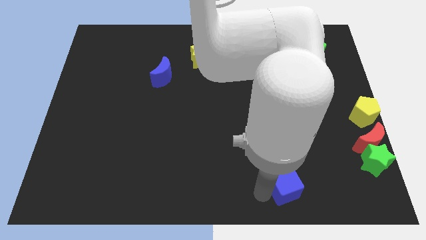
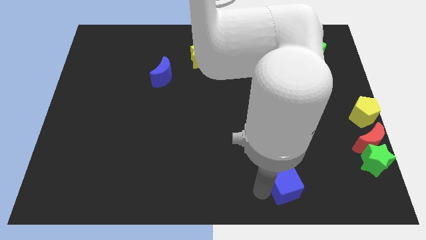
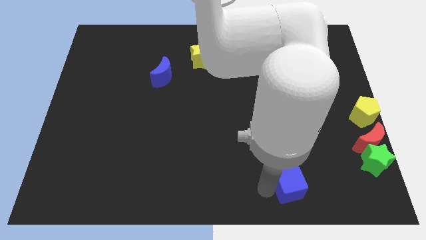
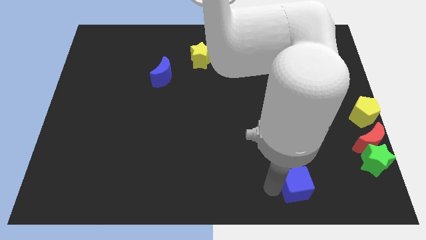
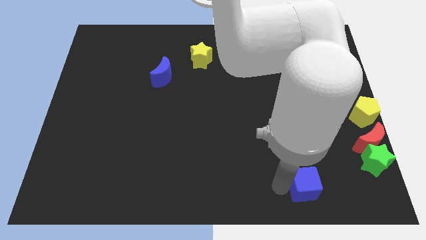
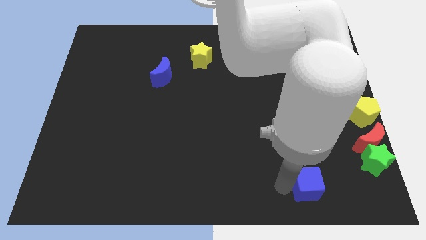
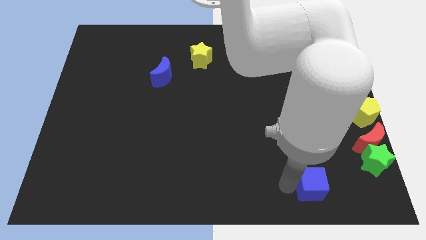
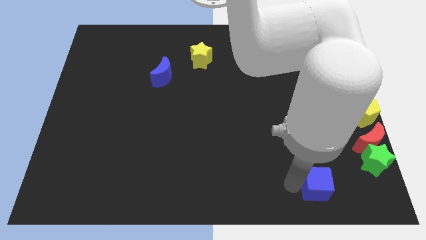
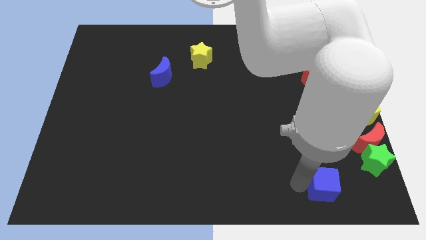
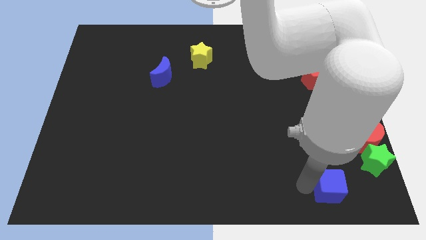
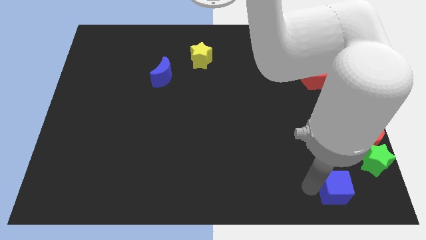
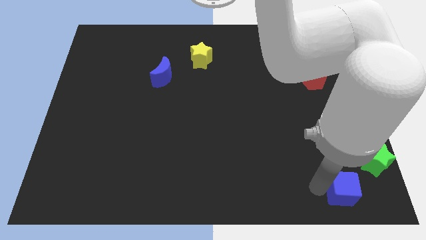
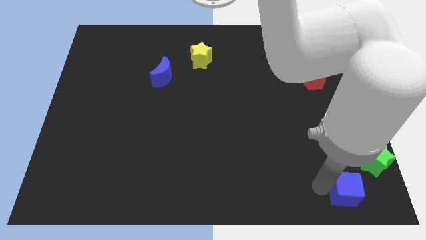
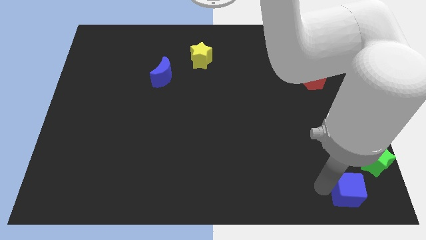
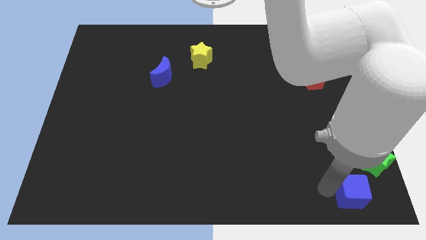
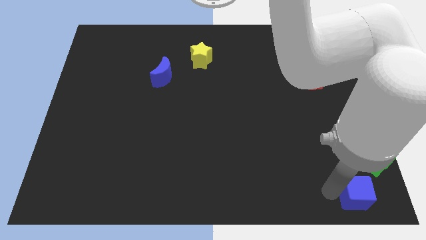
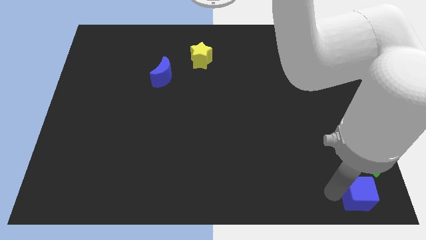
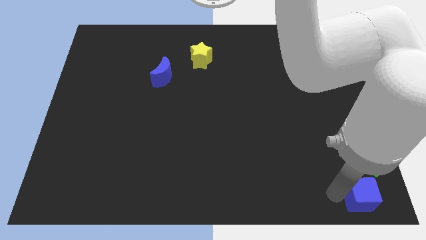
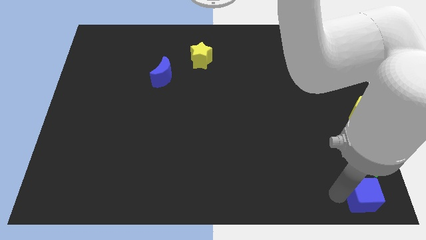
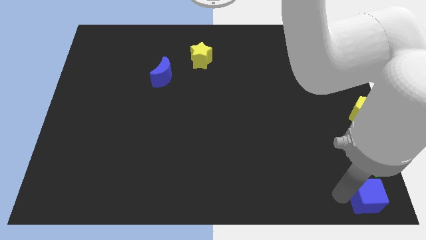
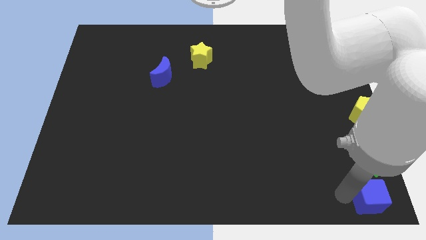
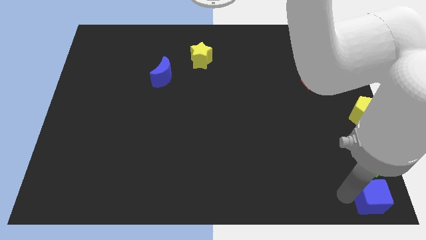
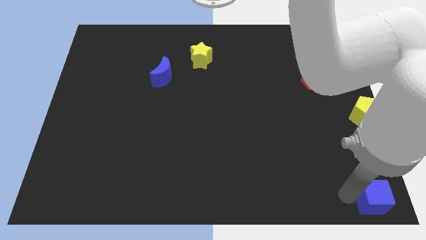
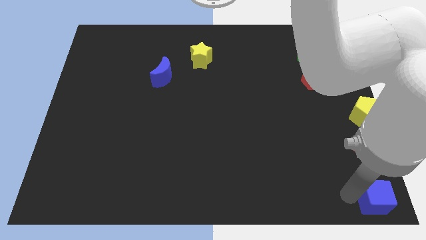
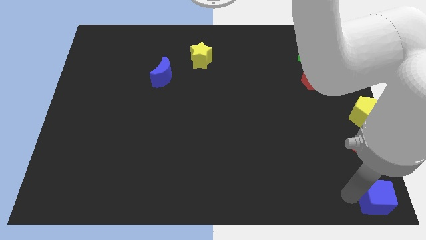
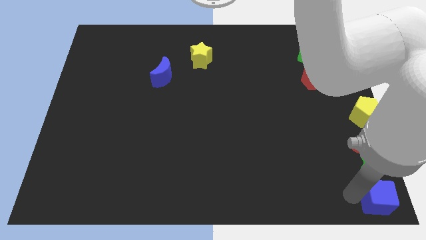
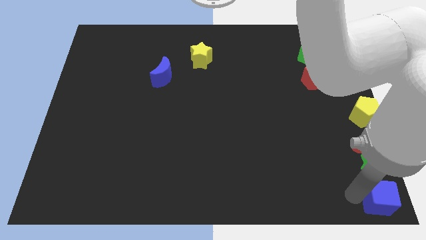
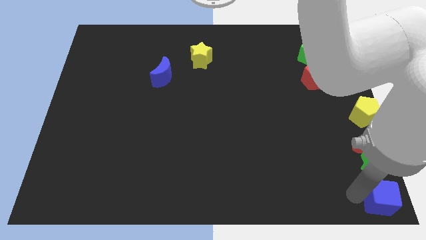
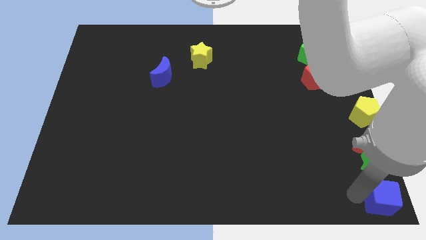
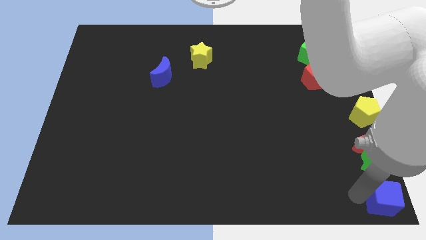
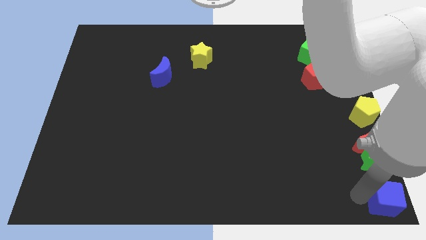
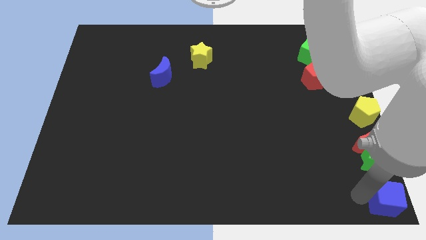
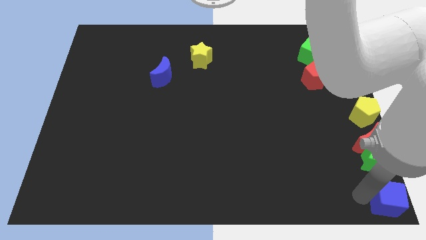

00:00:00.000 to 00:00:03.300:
move blue cube below the green star

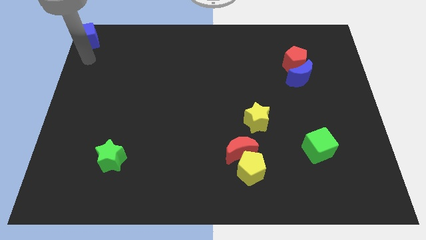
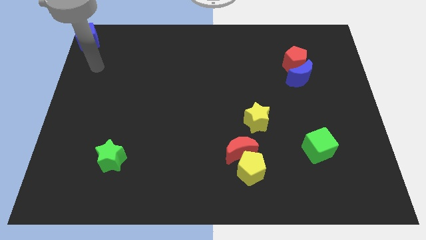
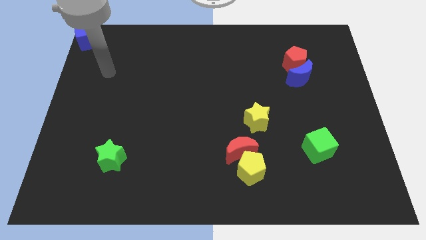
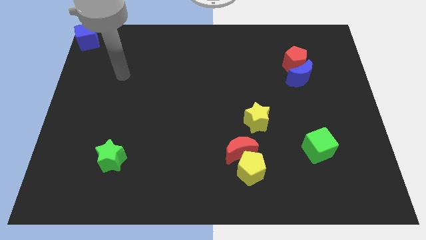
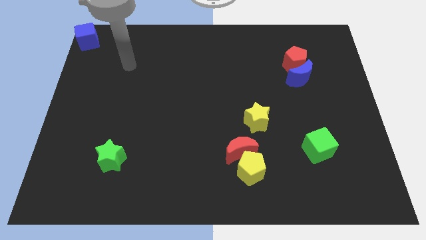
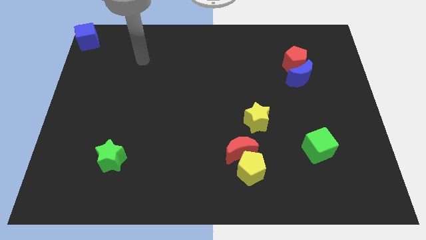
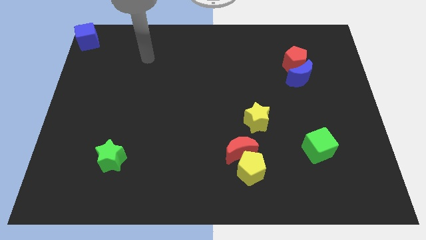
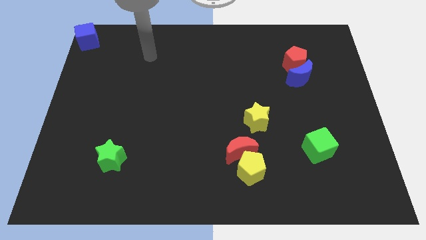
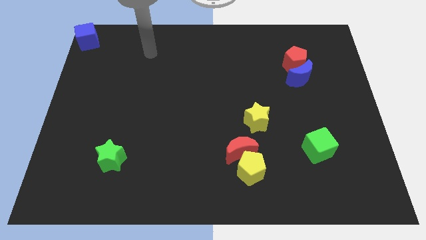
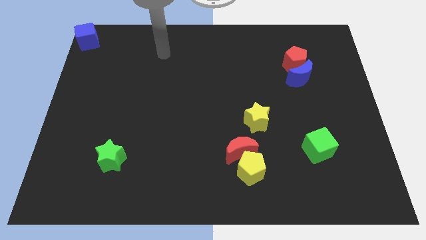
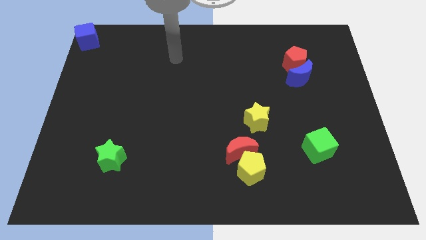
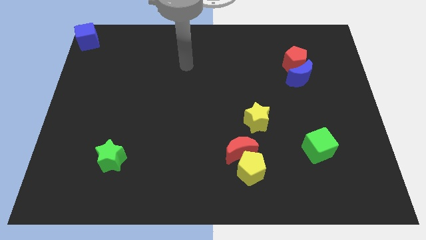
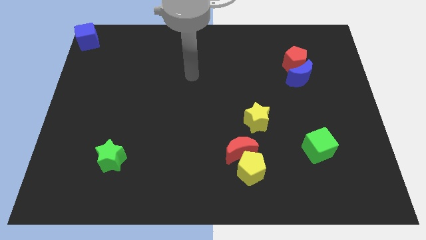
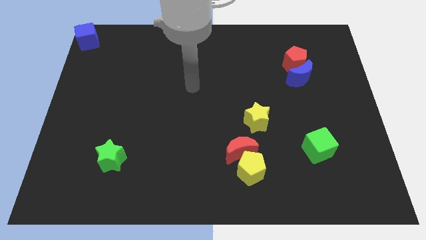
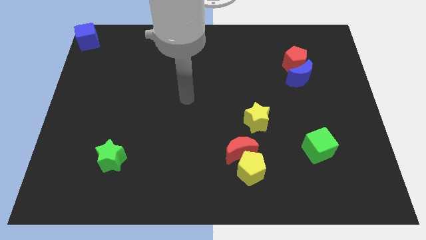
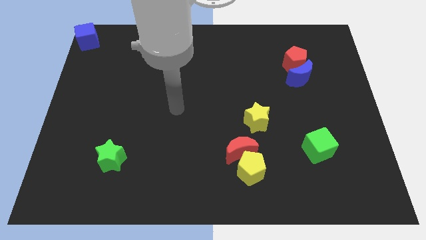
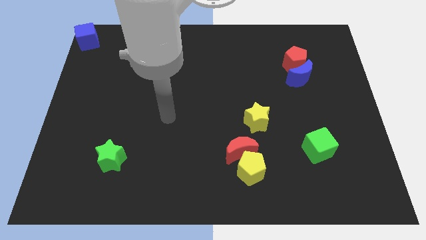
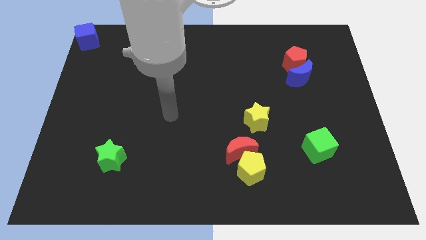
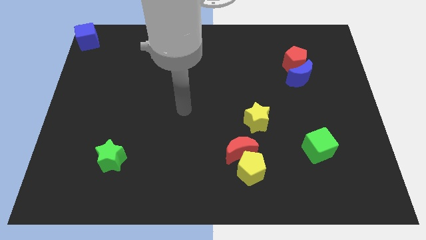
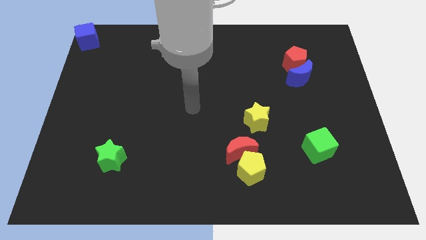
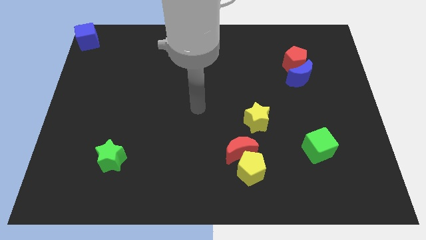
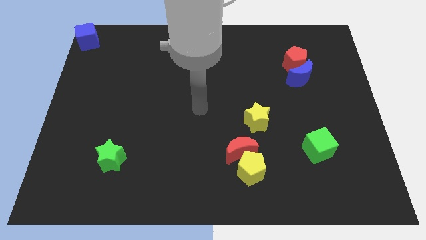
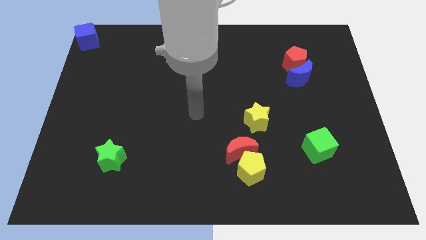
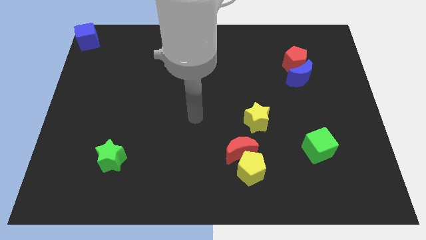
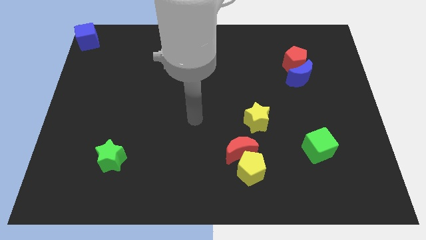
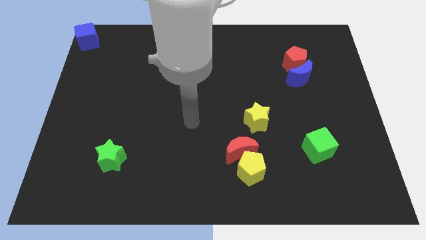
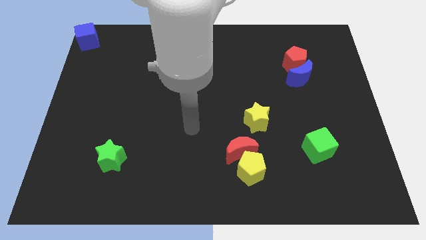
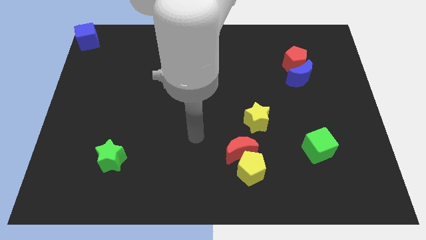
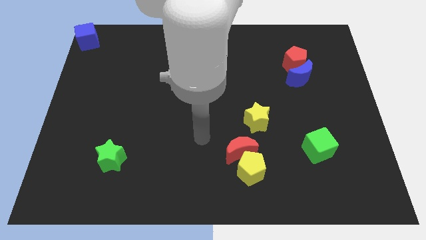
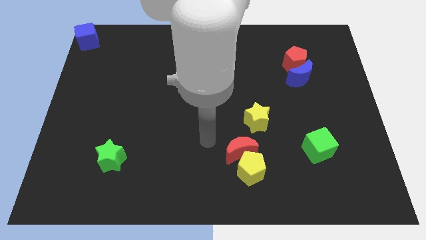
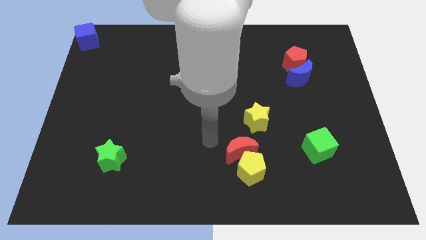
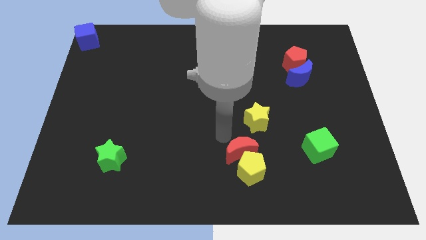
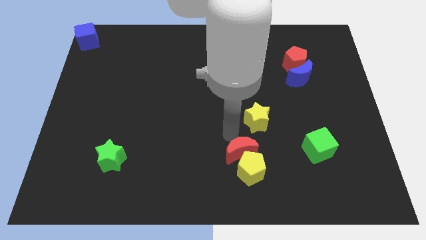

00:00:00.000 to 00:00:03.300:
move the arm close to the red moon

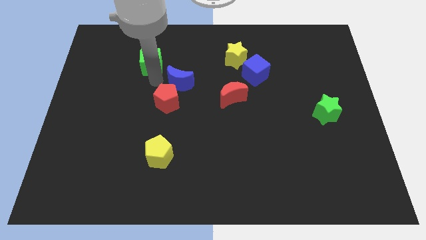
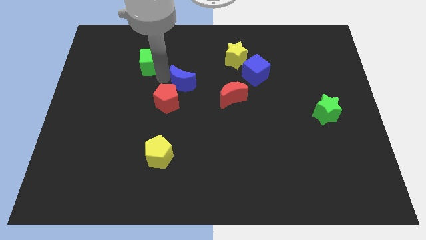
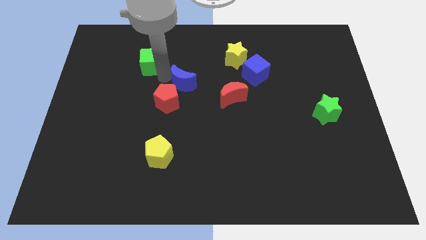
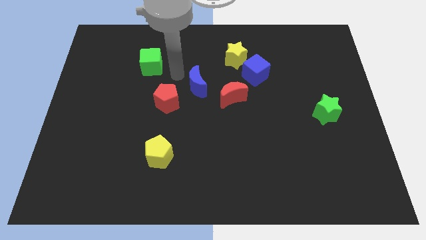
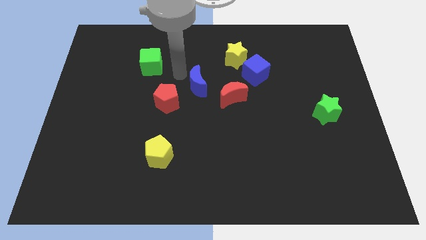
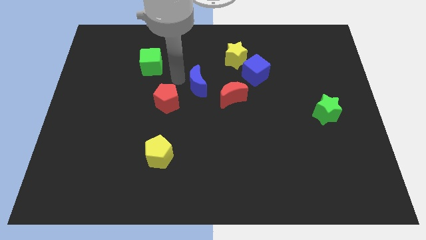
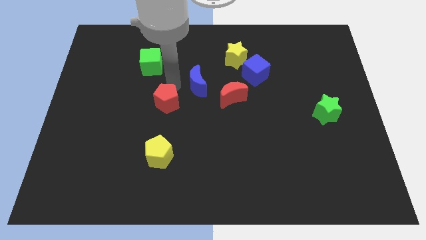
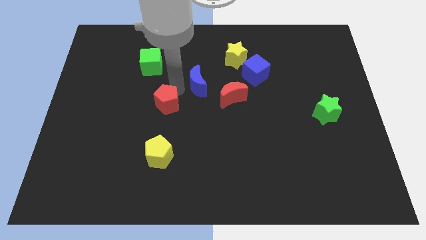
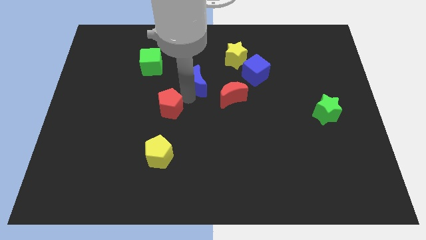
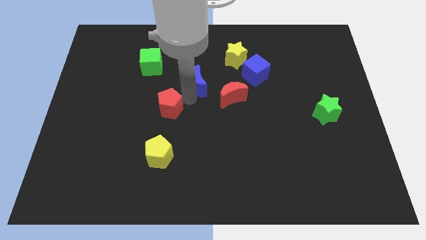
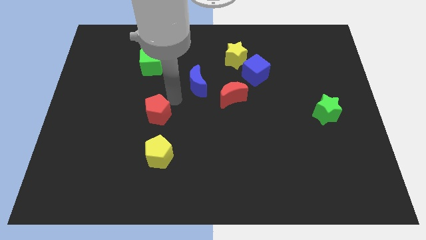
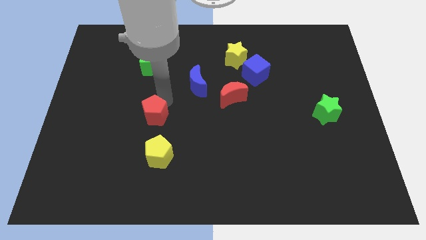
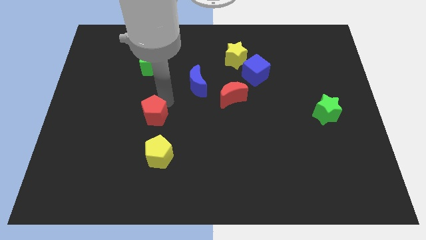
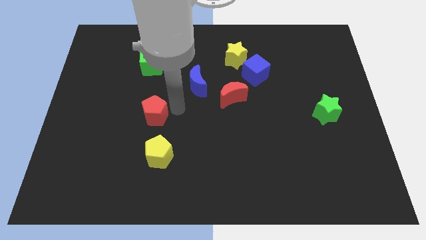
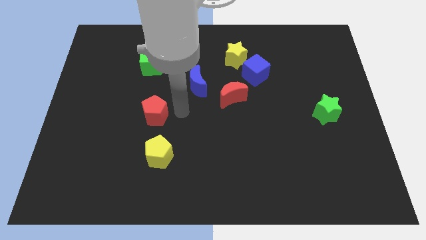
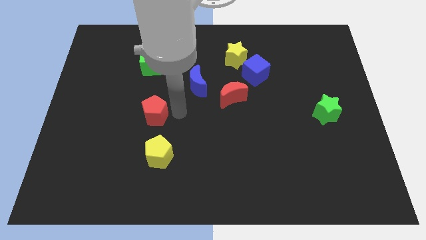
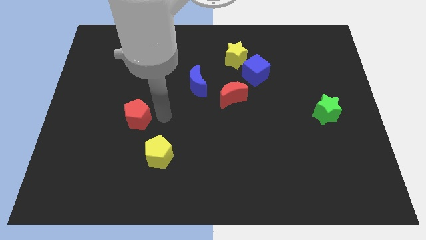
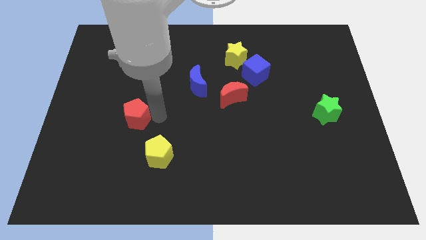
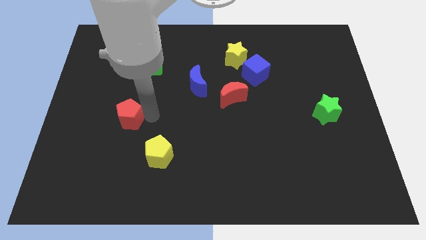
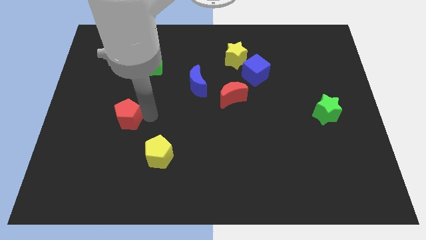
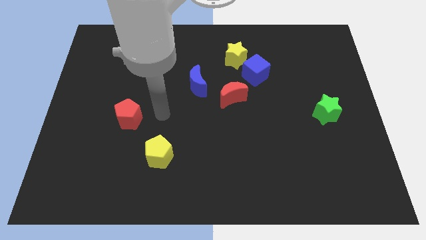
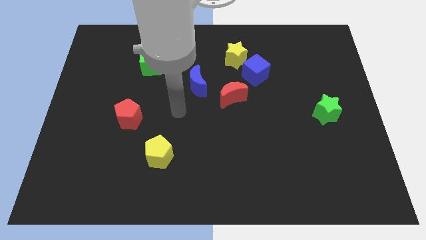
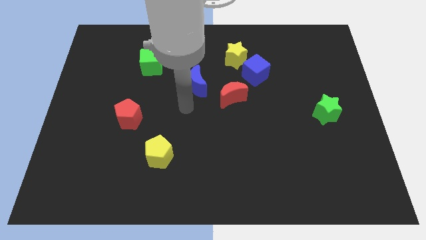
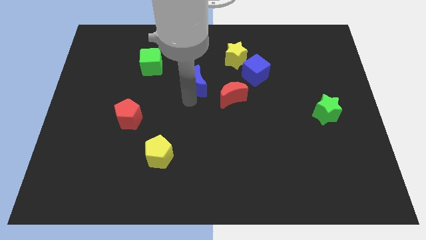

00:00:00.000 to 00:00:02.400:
place red pentagon to the top left of yellow pentagon
